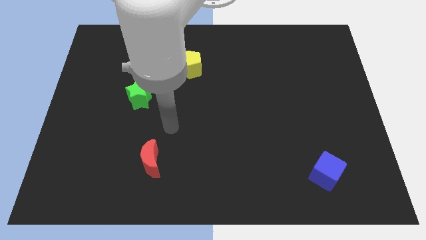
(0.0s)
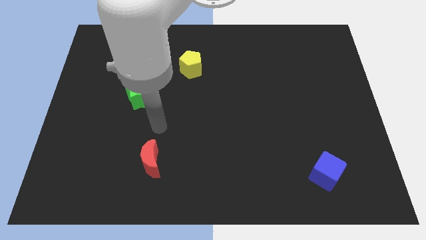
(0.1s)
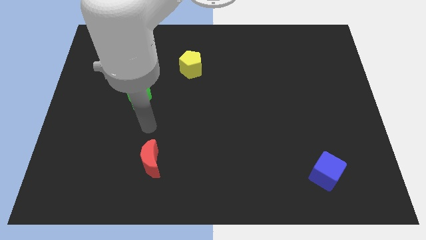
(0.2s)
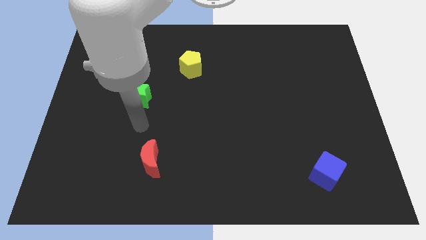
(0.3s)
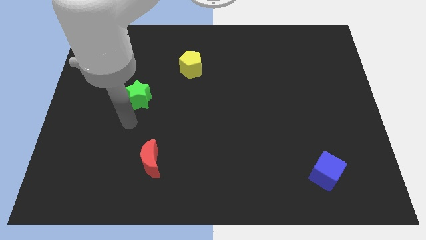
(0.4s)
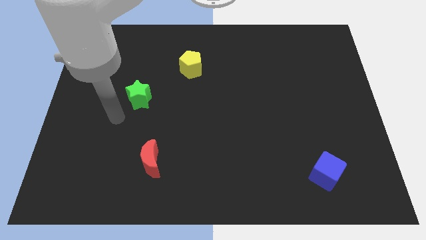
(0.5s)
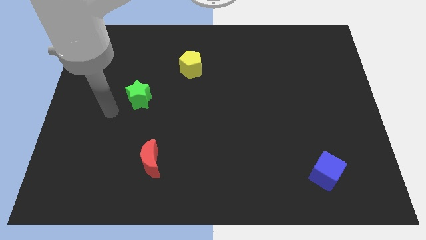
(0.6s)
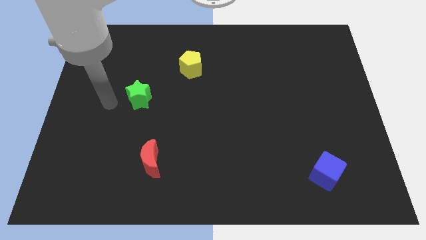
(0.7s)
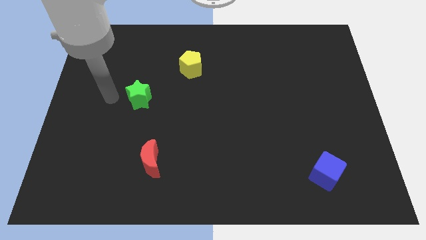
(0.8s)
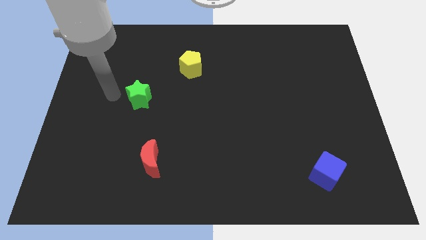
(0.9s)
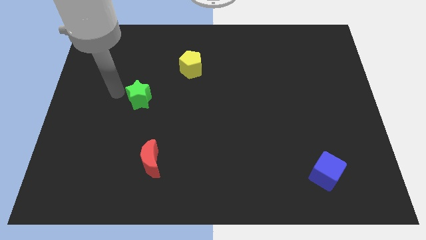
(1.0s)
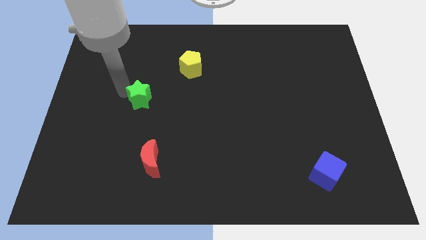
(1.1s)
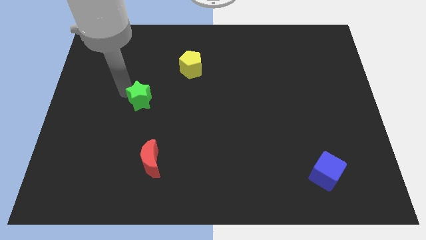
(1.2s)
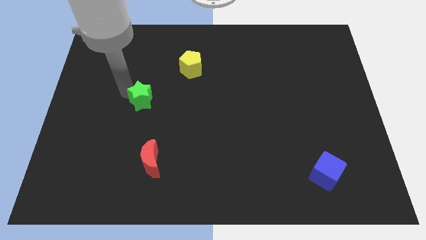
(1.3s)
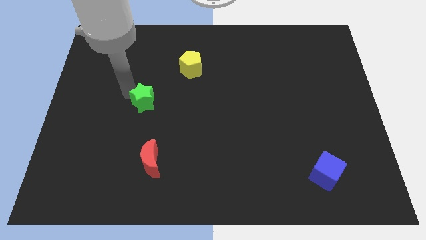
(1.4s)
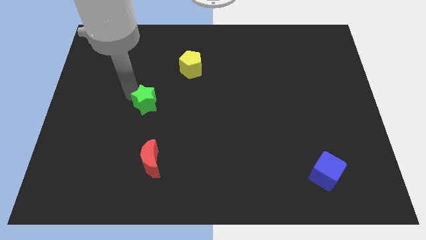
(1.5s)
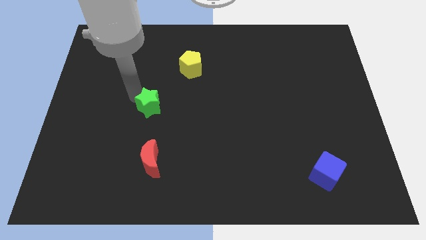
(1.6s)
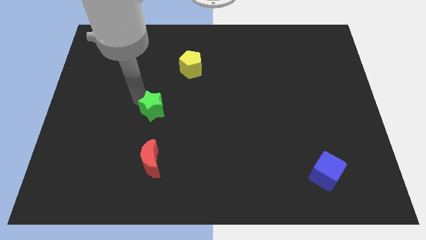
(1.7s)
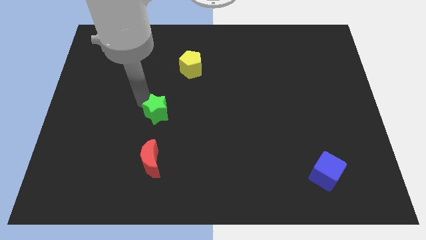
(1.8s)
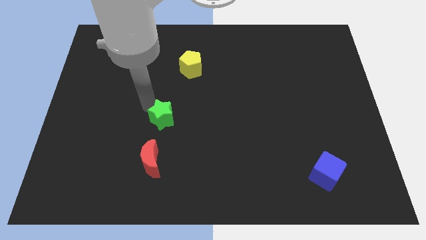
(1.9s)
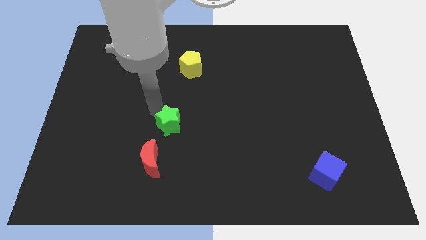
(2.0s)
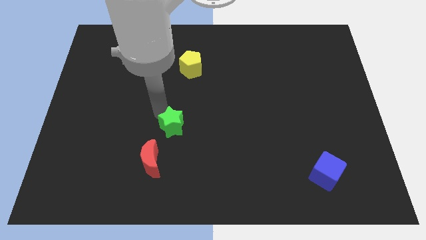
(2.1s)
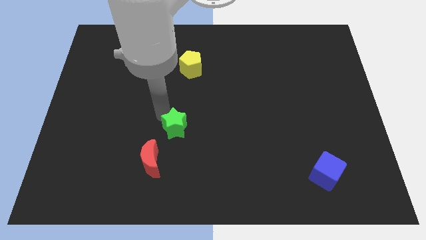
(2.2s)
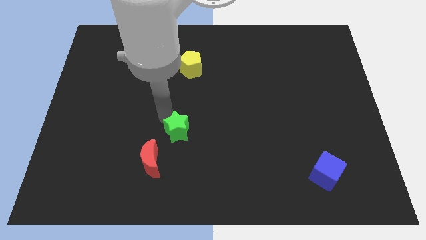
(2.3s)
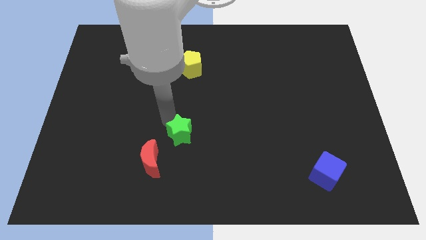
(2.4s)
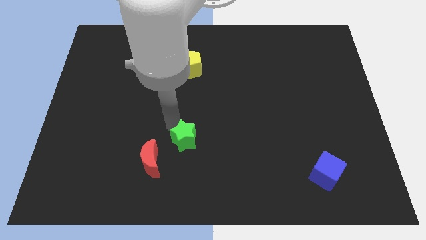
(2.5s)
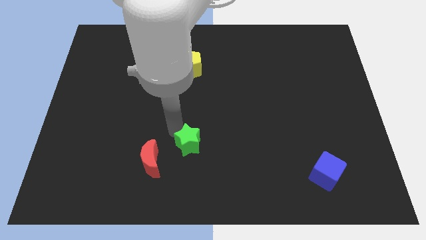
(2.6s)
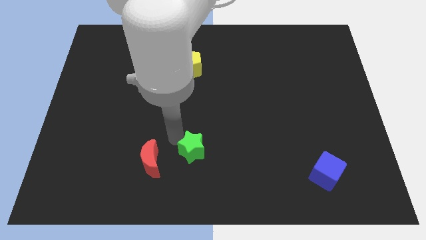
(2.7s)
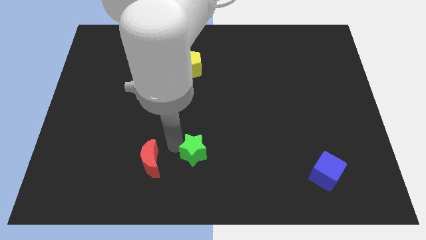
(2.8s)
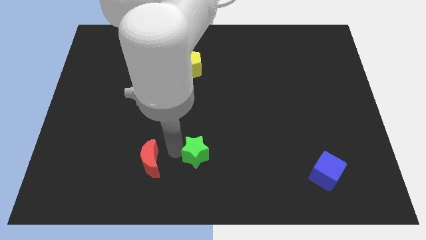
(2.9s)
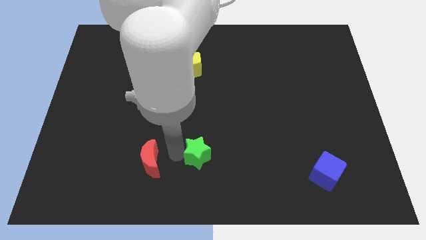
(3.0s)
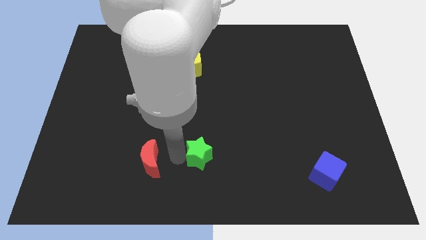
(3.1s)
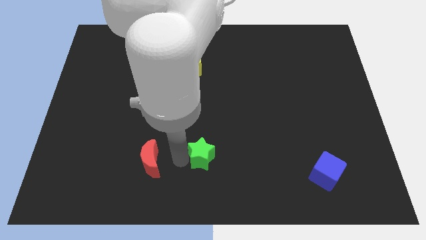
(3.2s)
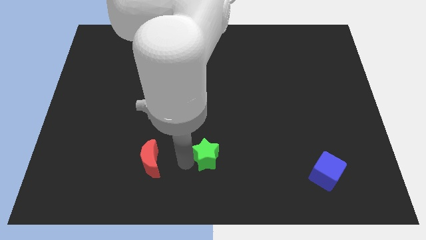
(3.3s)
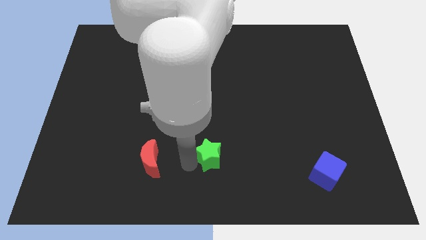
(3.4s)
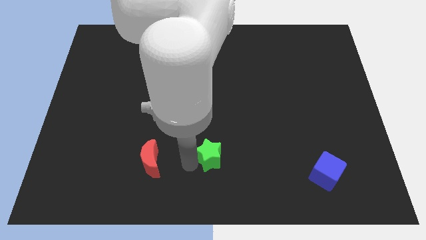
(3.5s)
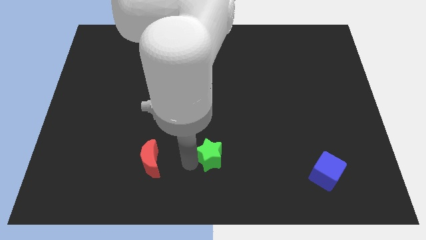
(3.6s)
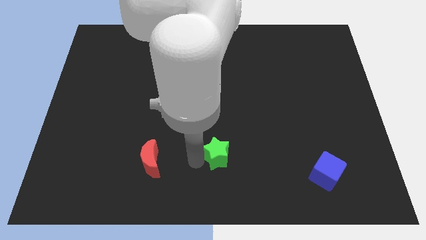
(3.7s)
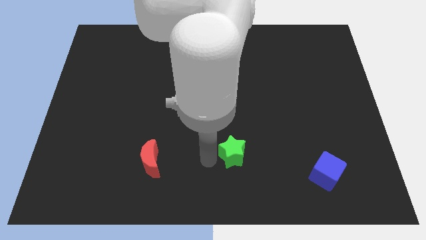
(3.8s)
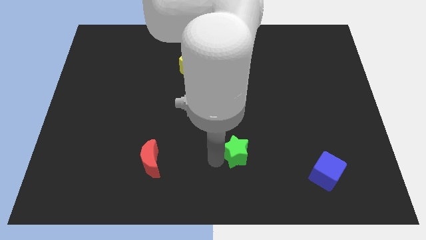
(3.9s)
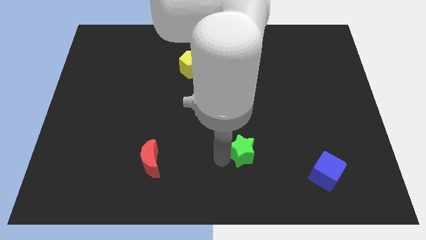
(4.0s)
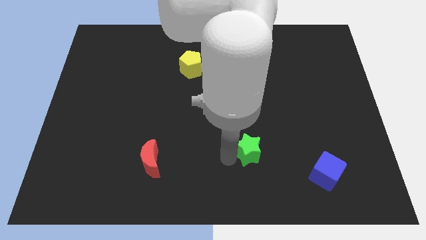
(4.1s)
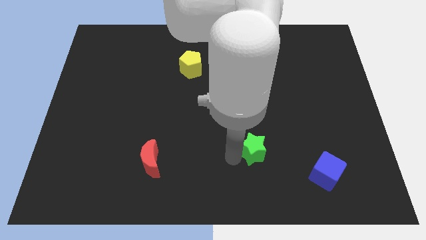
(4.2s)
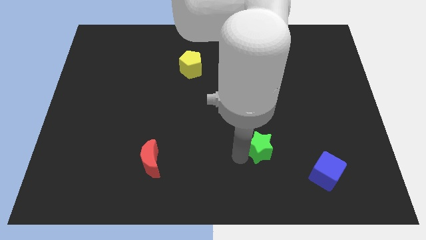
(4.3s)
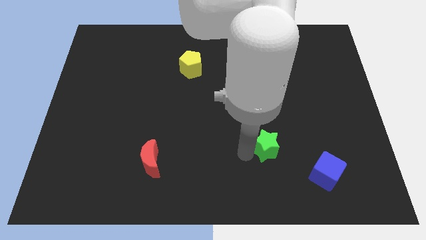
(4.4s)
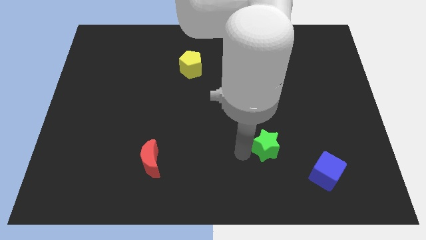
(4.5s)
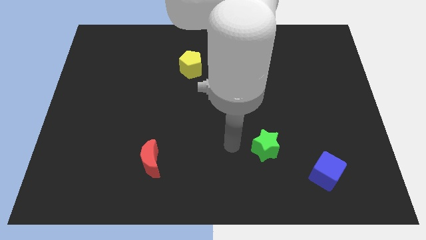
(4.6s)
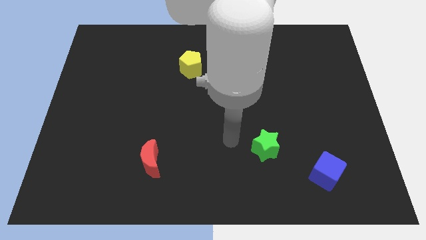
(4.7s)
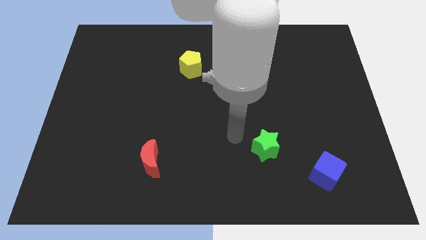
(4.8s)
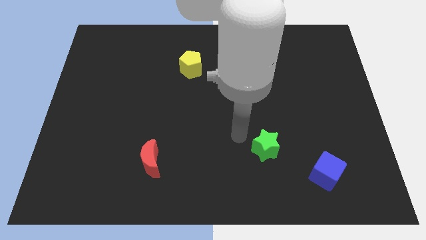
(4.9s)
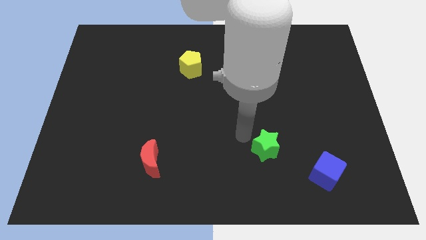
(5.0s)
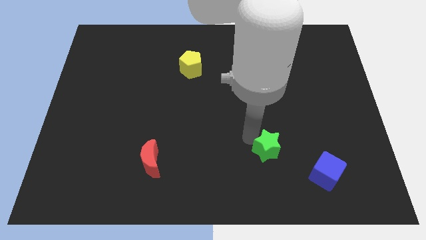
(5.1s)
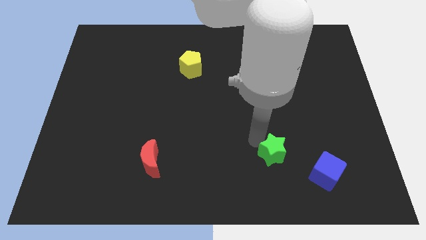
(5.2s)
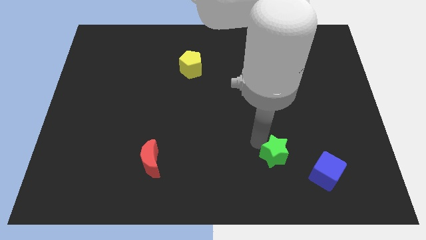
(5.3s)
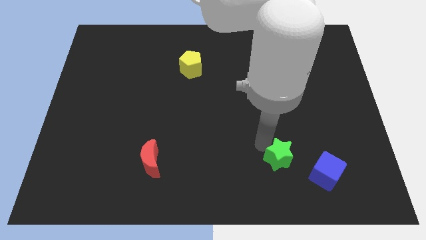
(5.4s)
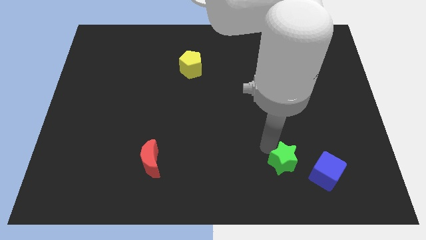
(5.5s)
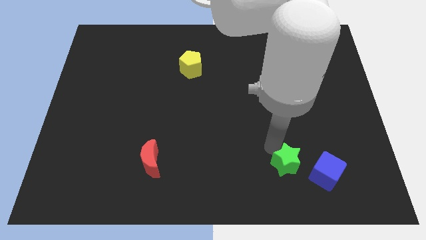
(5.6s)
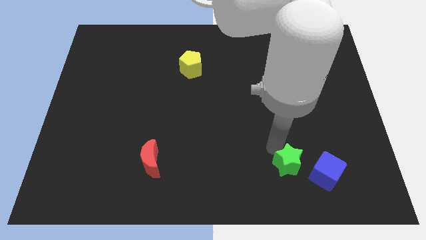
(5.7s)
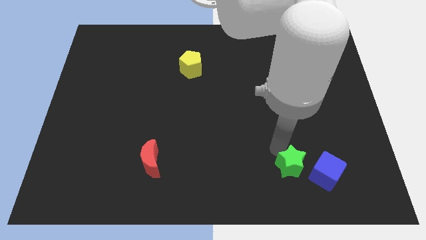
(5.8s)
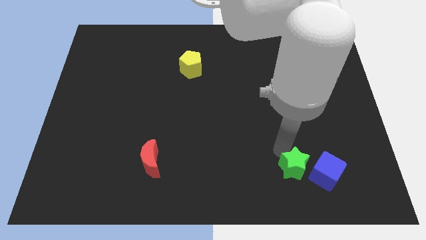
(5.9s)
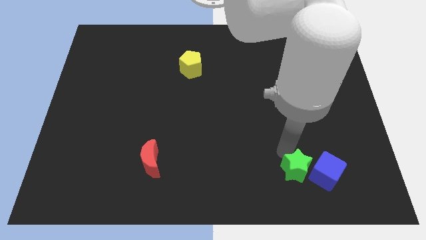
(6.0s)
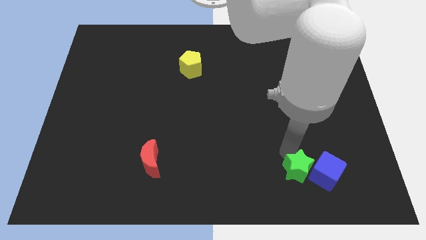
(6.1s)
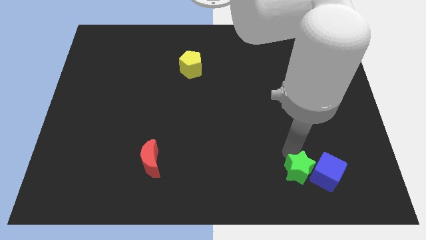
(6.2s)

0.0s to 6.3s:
slide the star to the blue cube

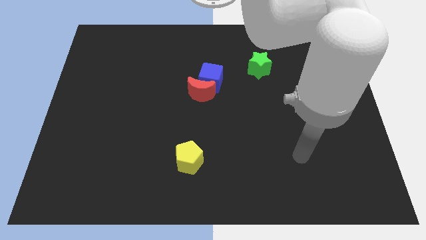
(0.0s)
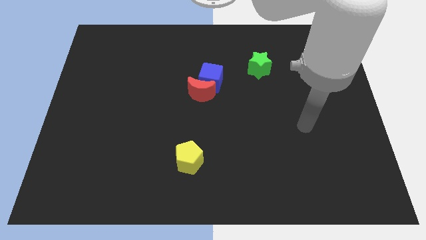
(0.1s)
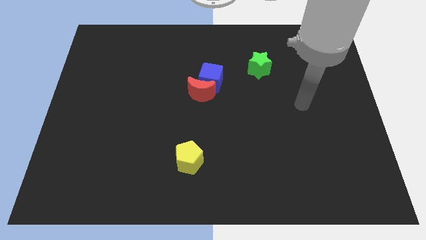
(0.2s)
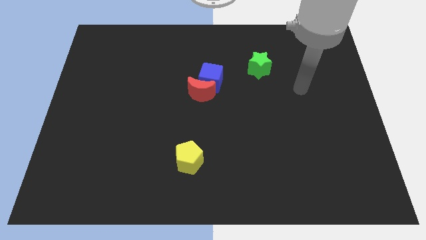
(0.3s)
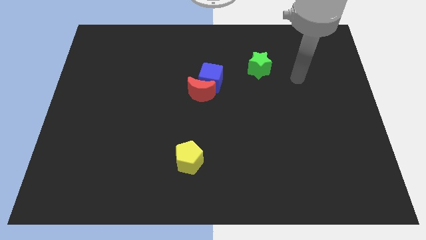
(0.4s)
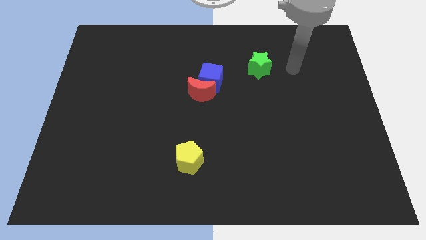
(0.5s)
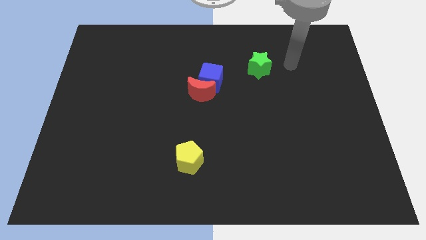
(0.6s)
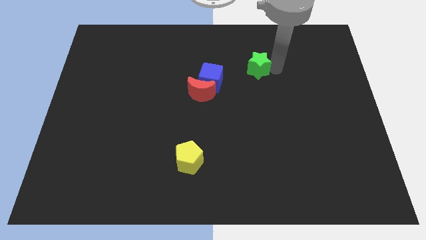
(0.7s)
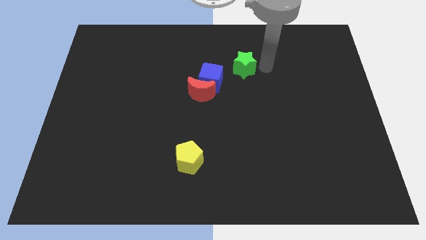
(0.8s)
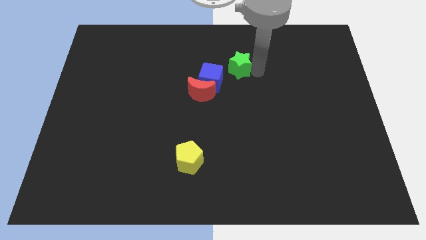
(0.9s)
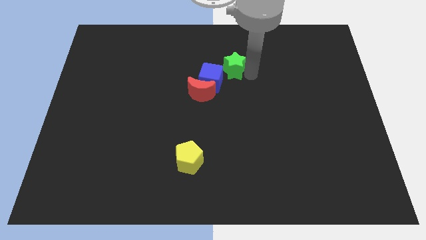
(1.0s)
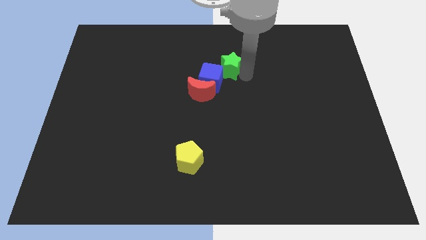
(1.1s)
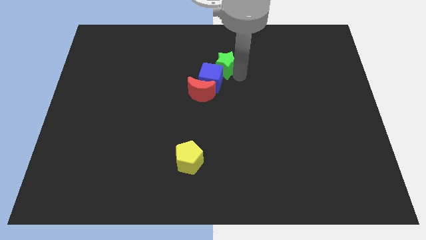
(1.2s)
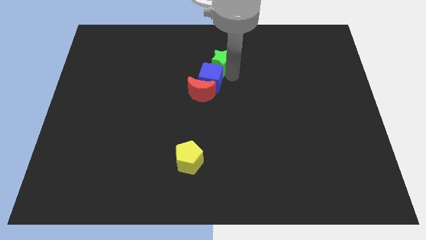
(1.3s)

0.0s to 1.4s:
push the star close to the cube

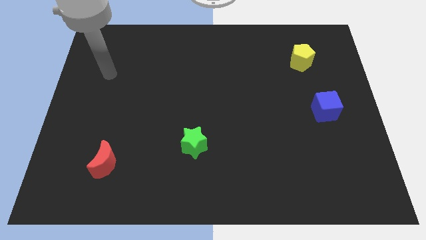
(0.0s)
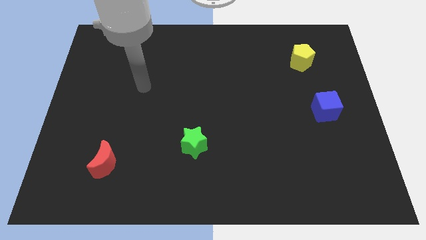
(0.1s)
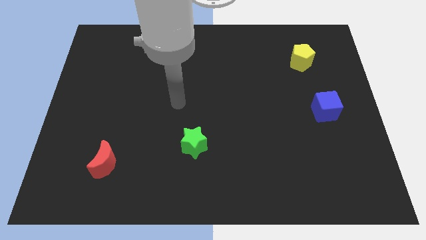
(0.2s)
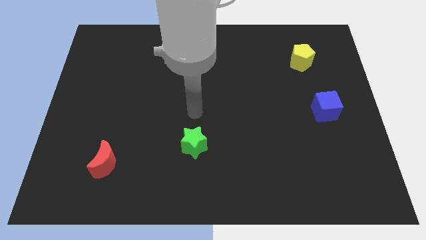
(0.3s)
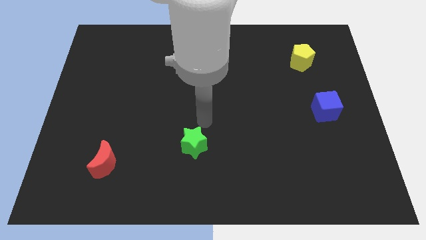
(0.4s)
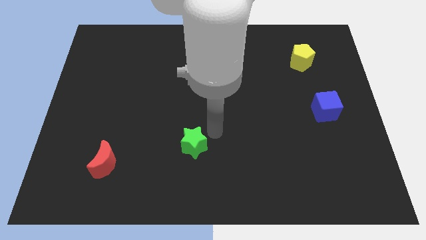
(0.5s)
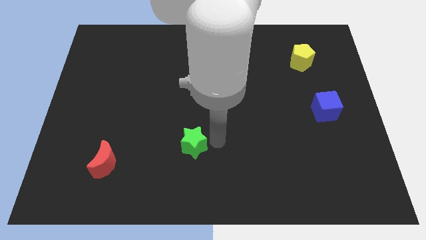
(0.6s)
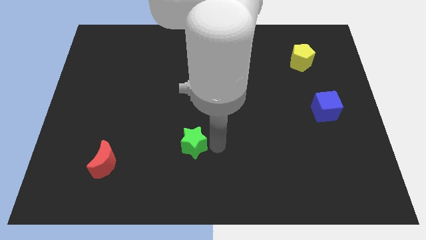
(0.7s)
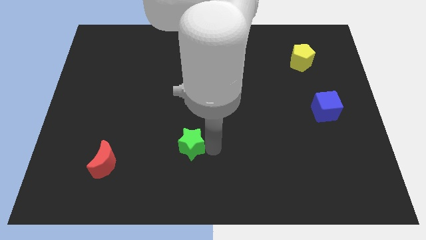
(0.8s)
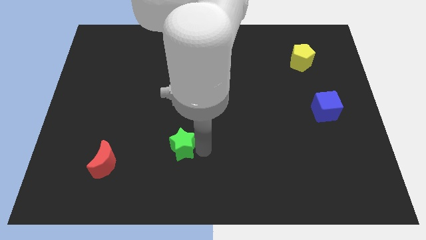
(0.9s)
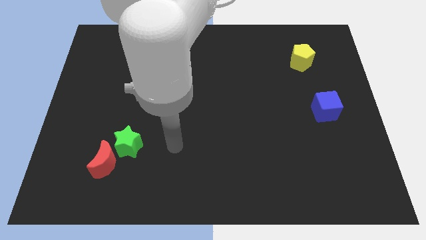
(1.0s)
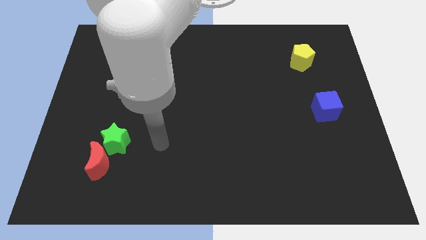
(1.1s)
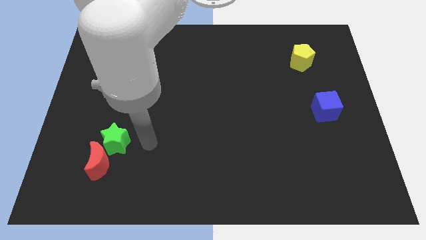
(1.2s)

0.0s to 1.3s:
put the star towards the red block
